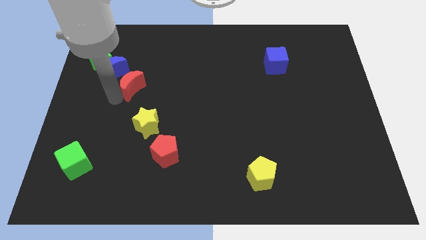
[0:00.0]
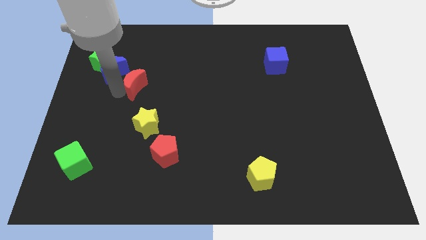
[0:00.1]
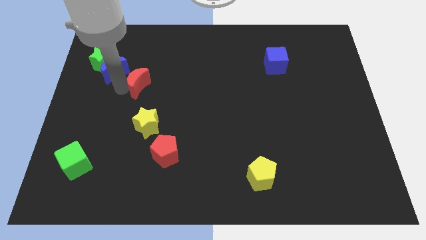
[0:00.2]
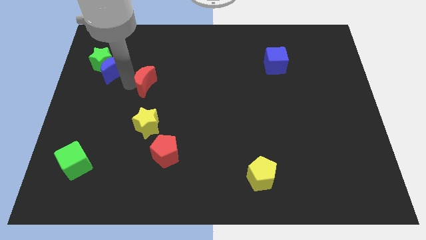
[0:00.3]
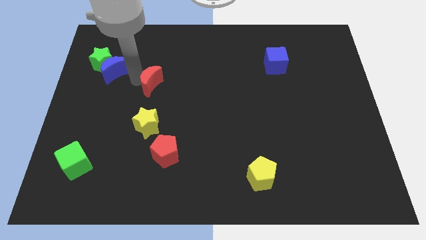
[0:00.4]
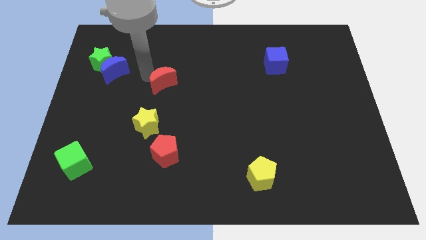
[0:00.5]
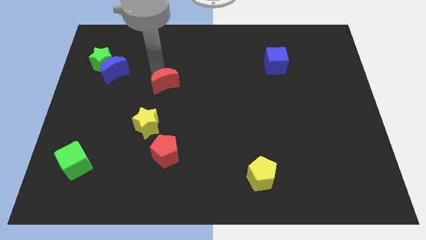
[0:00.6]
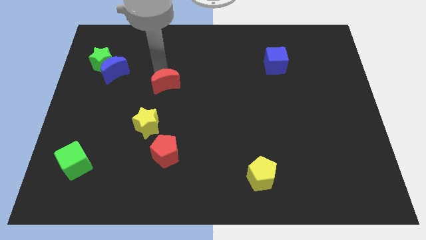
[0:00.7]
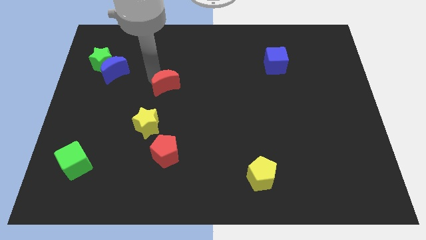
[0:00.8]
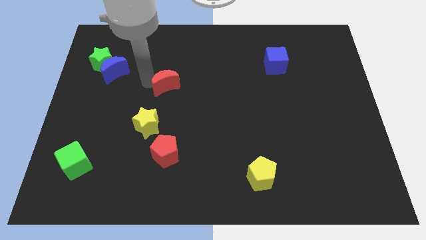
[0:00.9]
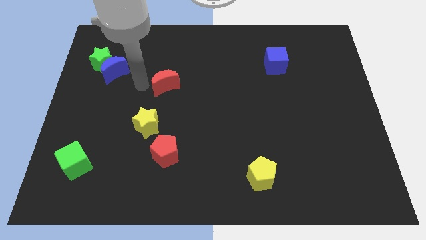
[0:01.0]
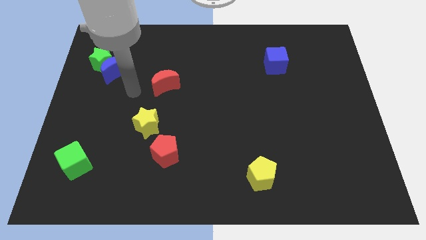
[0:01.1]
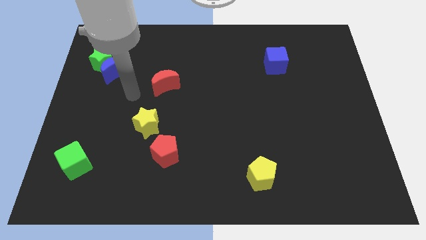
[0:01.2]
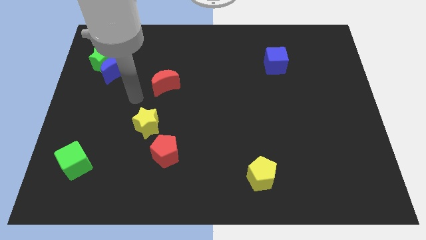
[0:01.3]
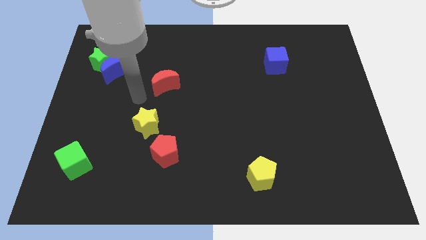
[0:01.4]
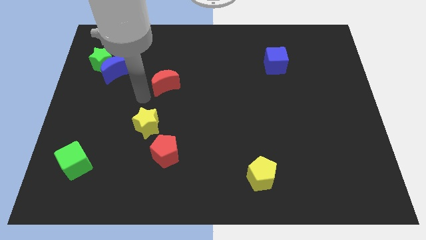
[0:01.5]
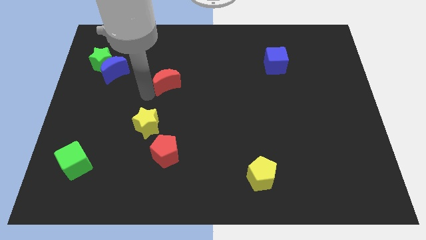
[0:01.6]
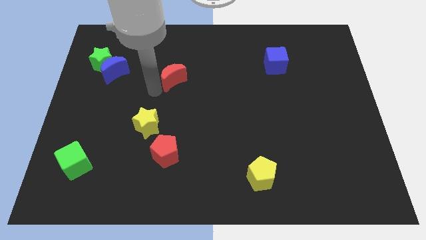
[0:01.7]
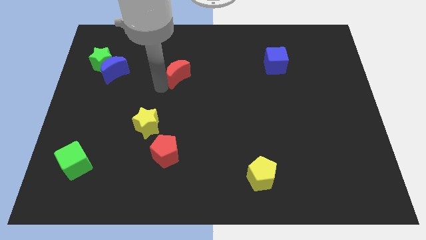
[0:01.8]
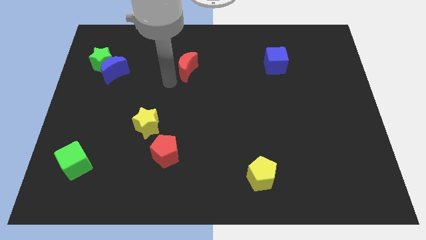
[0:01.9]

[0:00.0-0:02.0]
push the red crescent towards the left of the blue cube

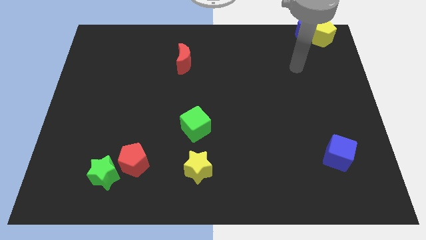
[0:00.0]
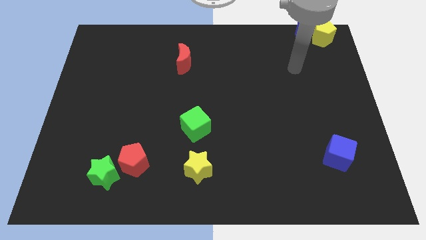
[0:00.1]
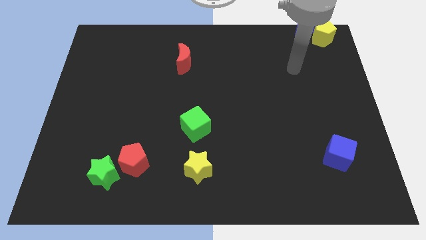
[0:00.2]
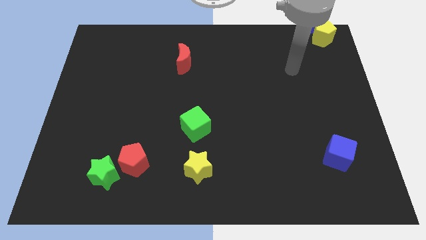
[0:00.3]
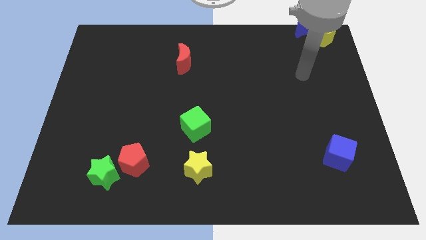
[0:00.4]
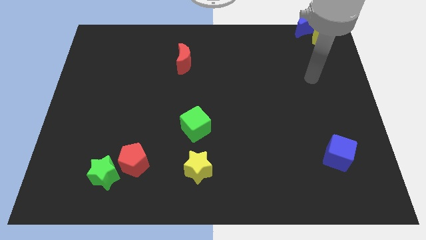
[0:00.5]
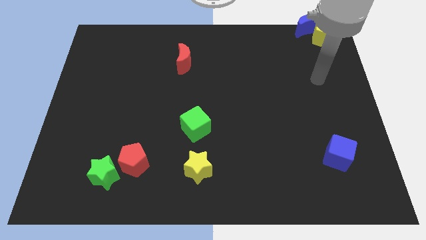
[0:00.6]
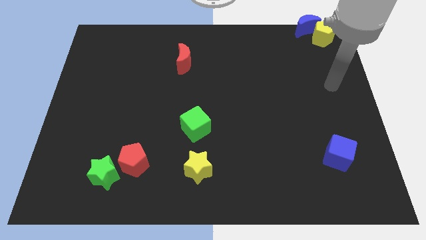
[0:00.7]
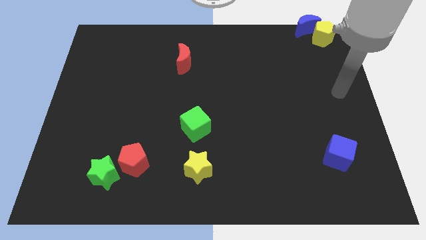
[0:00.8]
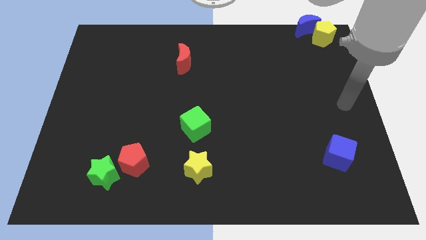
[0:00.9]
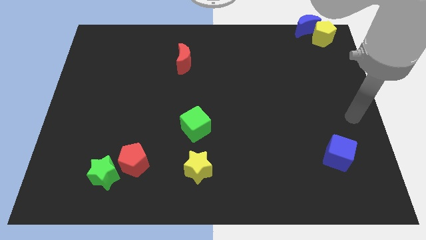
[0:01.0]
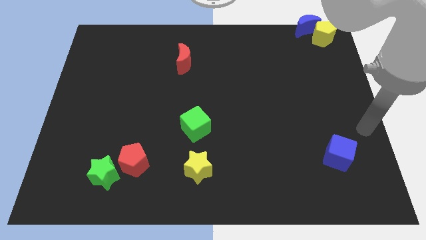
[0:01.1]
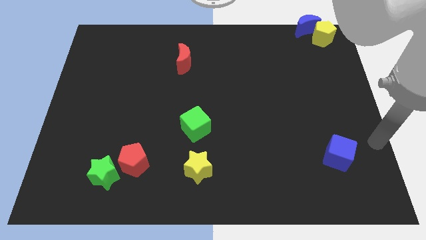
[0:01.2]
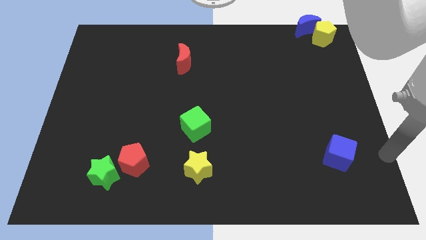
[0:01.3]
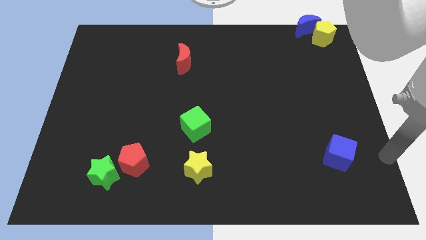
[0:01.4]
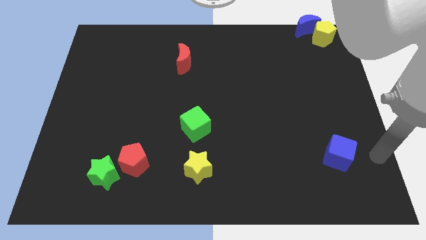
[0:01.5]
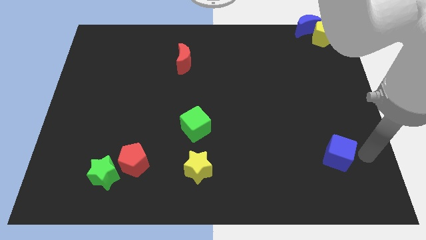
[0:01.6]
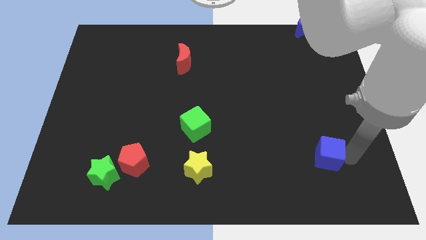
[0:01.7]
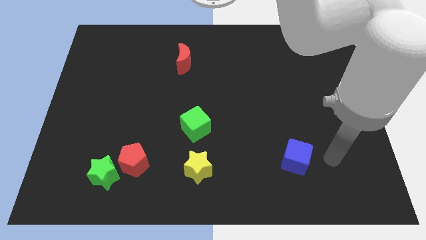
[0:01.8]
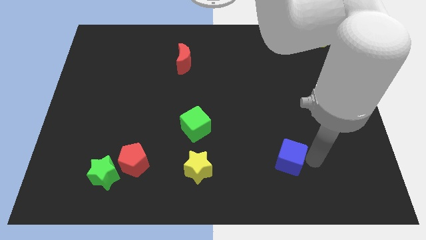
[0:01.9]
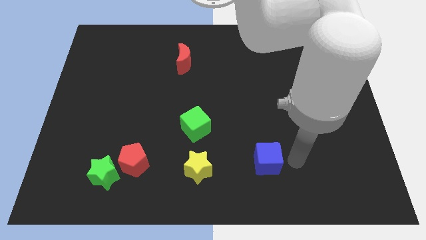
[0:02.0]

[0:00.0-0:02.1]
move the blue cube towards the yellow star

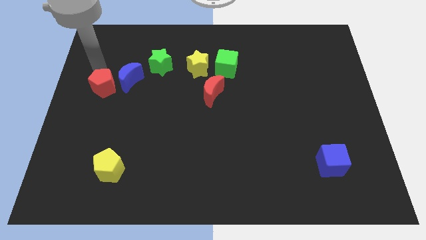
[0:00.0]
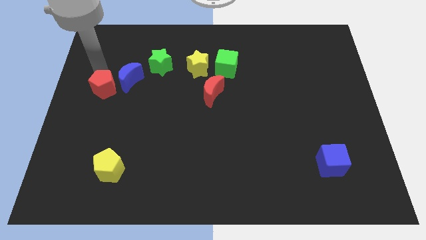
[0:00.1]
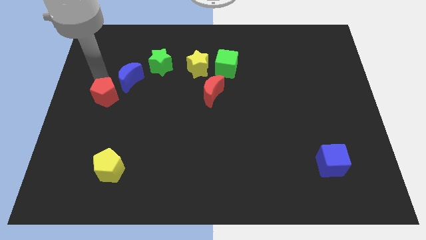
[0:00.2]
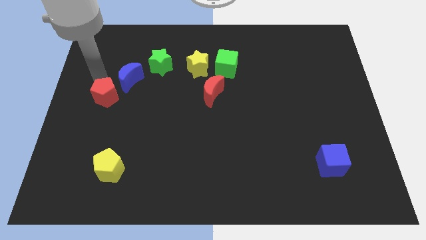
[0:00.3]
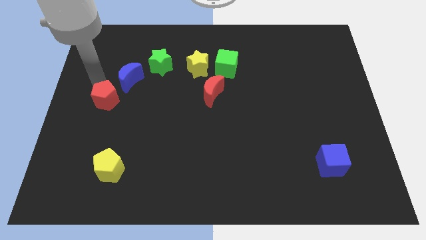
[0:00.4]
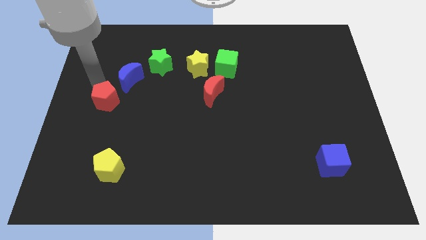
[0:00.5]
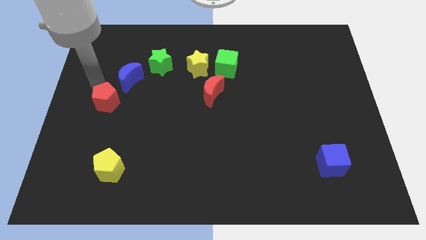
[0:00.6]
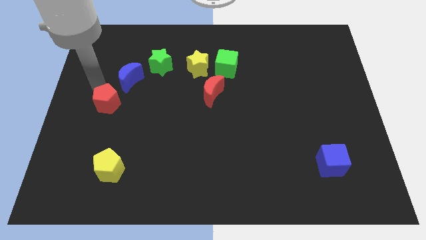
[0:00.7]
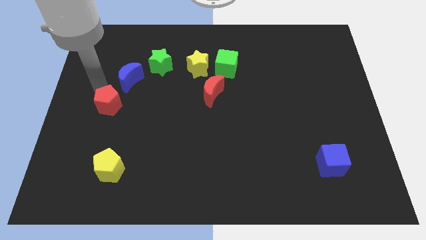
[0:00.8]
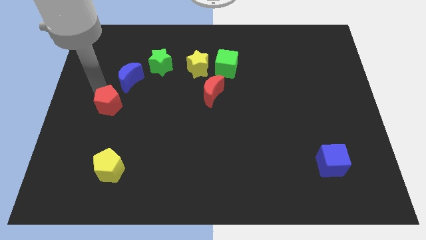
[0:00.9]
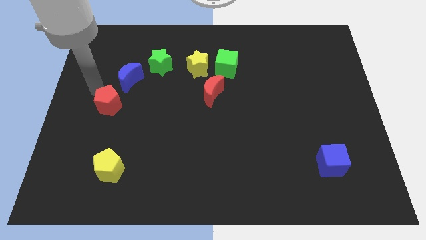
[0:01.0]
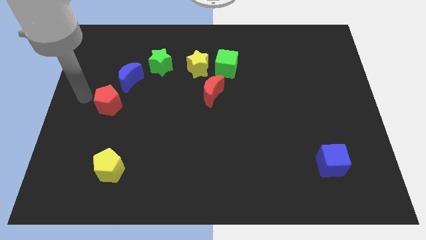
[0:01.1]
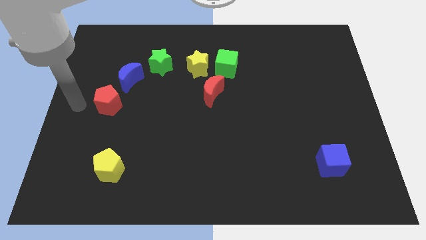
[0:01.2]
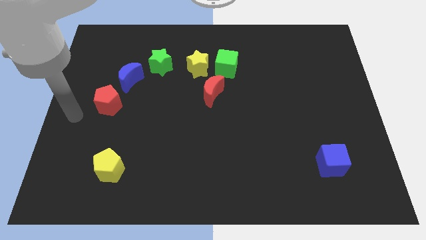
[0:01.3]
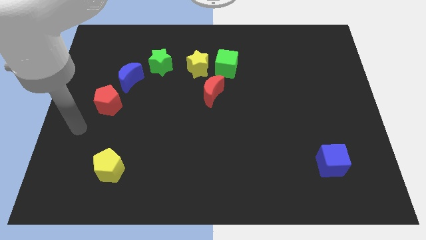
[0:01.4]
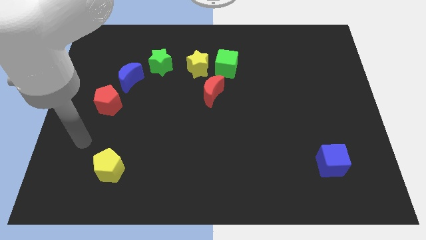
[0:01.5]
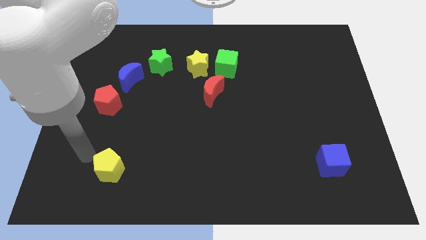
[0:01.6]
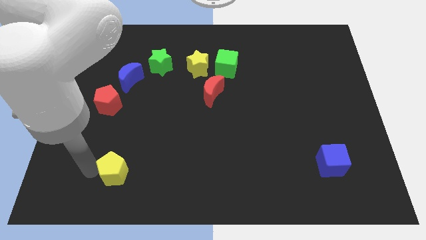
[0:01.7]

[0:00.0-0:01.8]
move the red pentagon daigonal to the blue moon

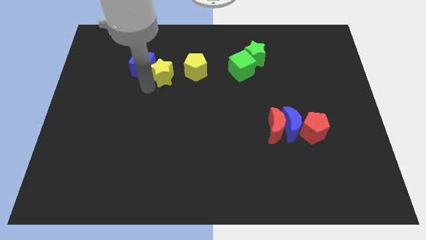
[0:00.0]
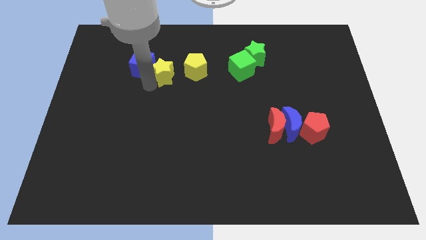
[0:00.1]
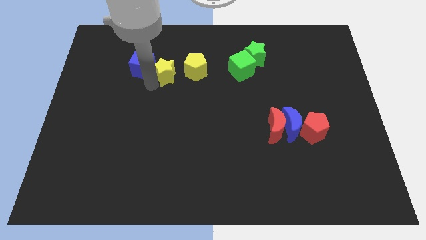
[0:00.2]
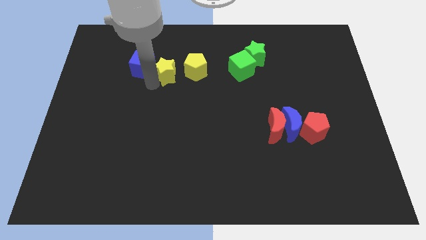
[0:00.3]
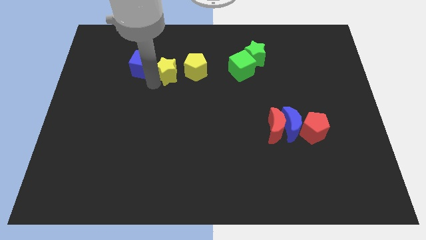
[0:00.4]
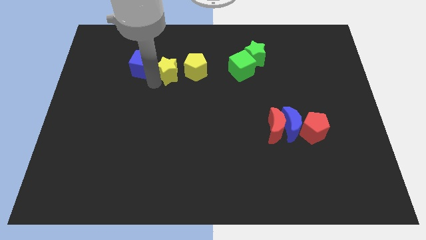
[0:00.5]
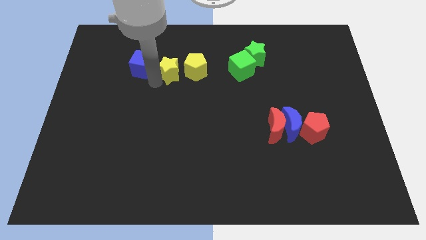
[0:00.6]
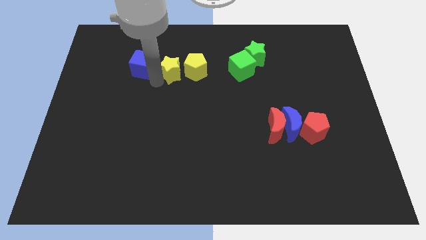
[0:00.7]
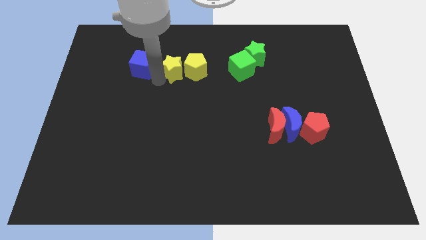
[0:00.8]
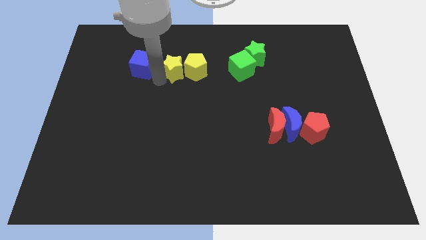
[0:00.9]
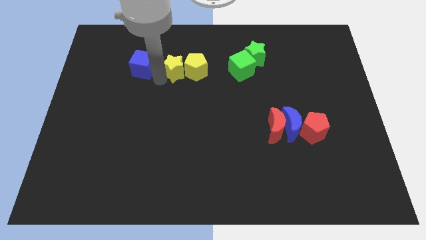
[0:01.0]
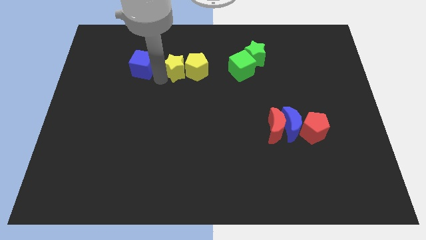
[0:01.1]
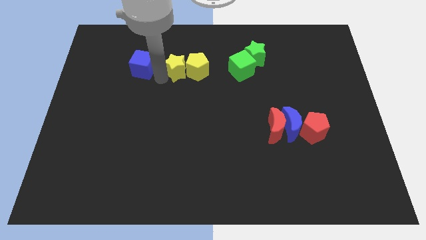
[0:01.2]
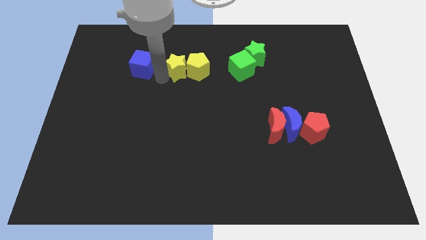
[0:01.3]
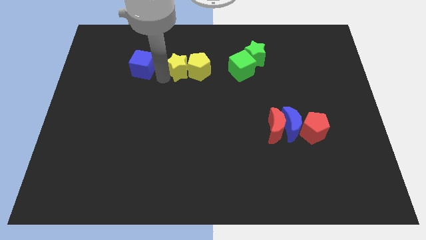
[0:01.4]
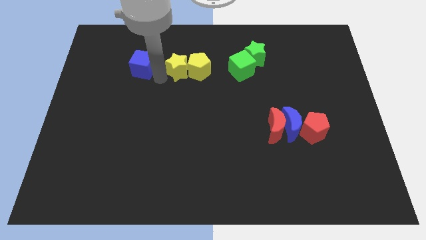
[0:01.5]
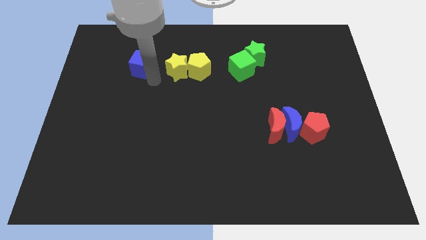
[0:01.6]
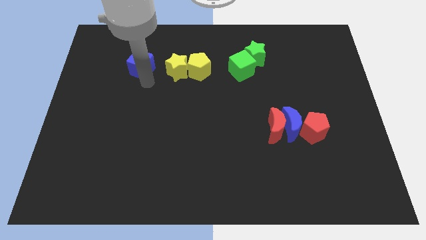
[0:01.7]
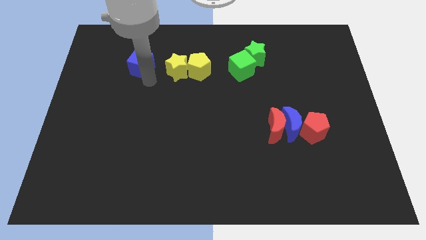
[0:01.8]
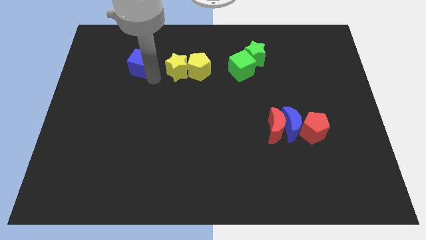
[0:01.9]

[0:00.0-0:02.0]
move yellow star into yellow pentagon

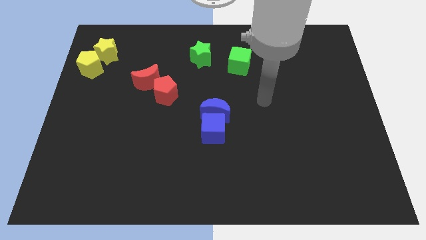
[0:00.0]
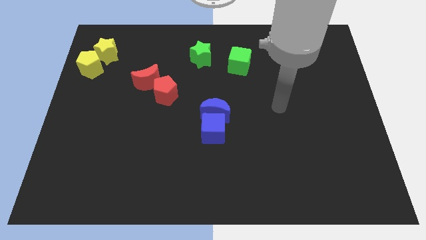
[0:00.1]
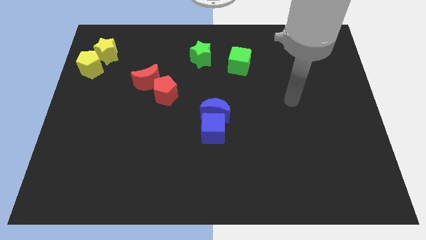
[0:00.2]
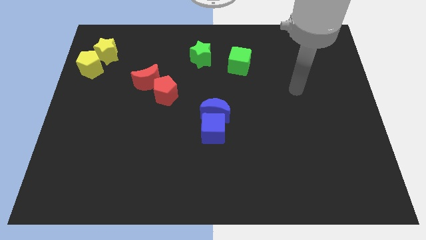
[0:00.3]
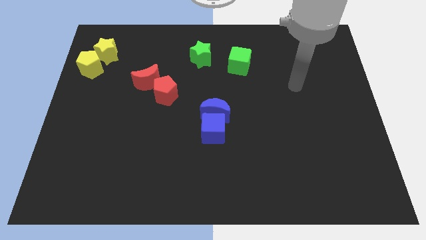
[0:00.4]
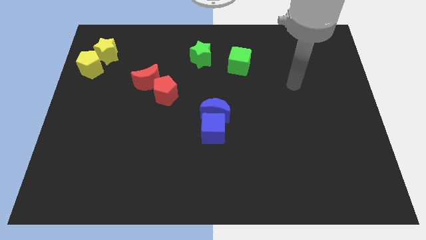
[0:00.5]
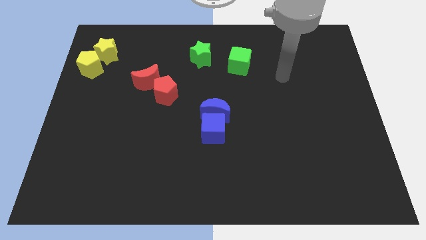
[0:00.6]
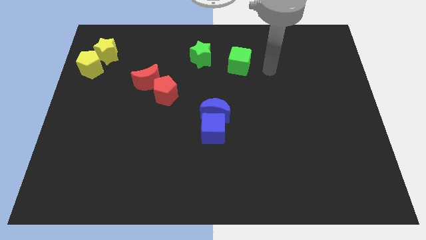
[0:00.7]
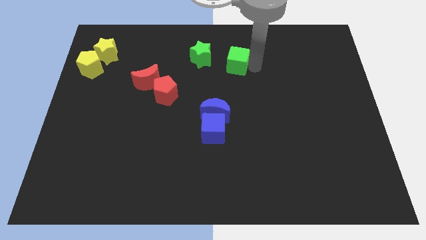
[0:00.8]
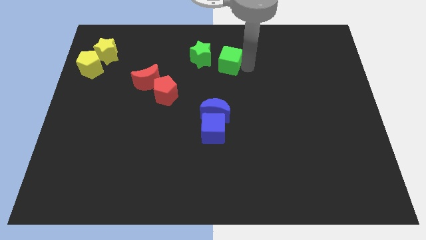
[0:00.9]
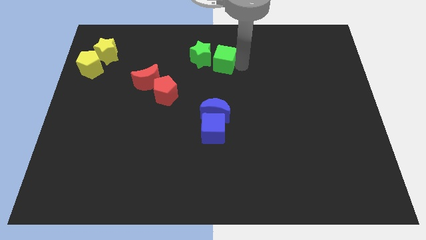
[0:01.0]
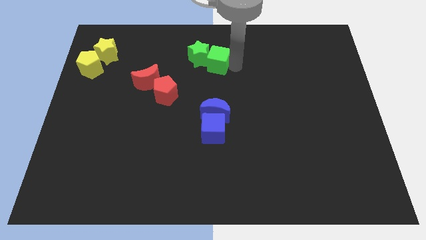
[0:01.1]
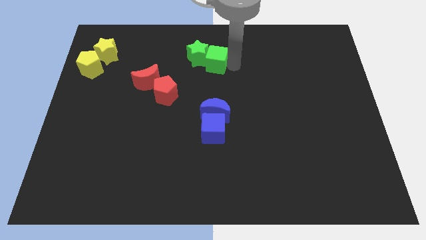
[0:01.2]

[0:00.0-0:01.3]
push the green cube into the green star
